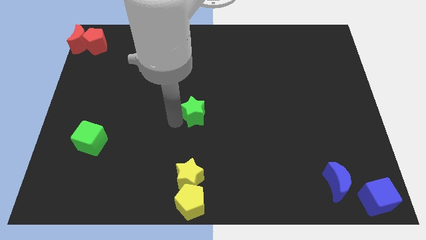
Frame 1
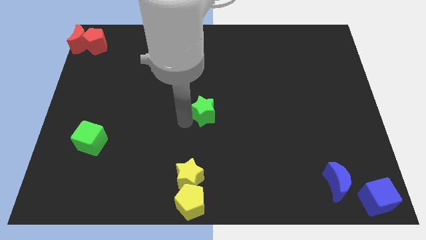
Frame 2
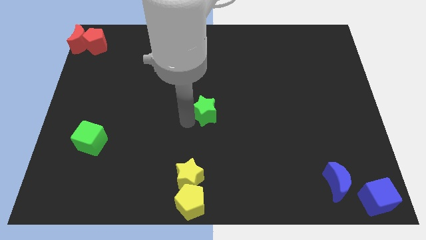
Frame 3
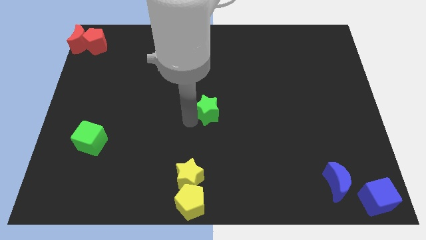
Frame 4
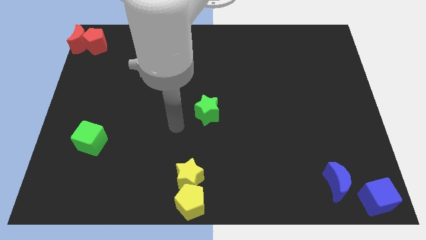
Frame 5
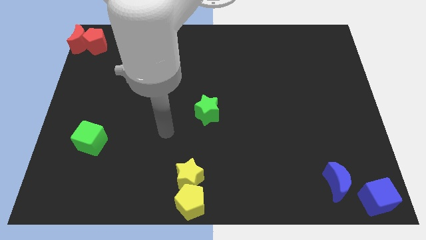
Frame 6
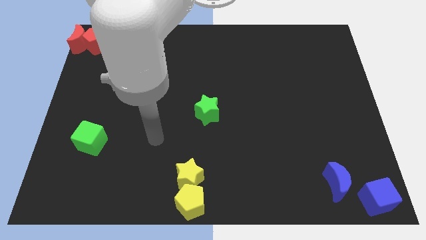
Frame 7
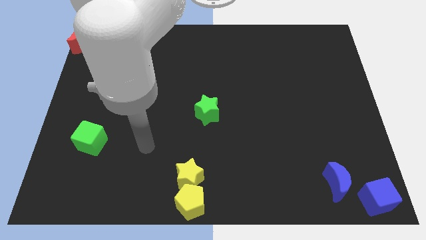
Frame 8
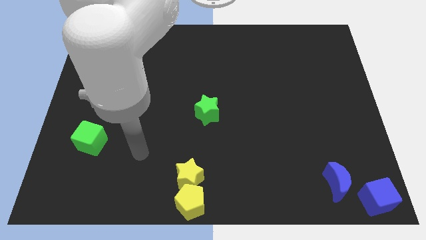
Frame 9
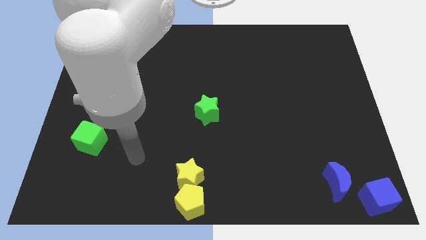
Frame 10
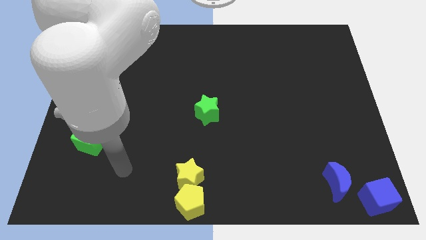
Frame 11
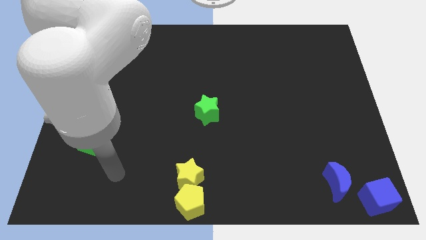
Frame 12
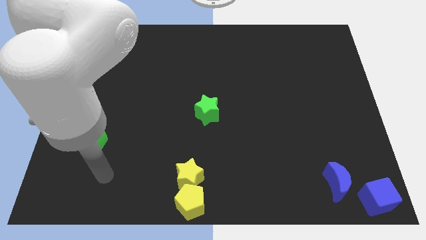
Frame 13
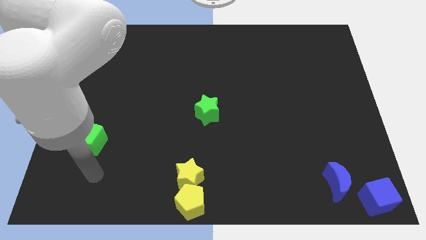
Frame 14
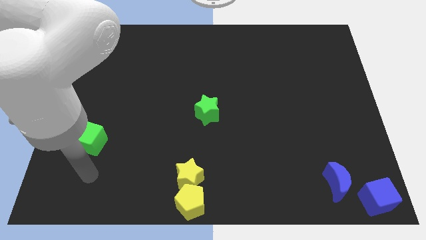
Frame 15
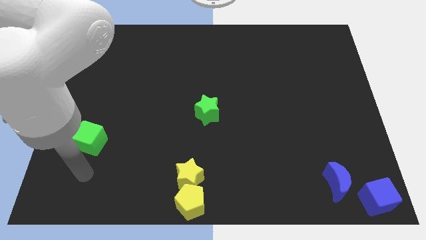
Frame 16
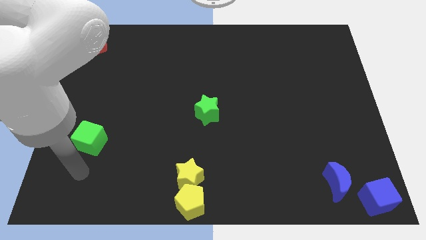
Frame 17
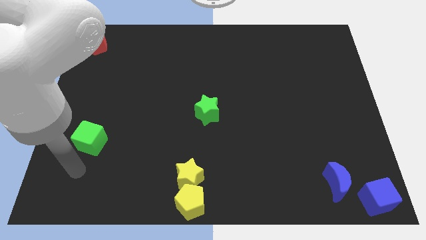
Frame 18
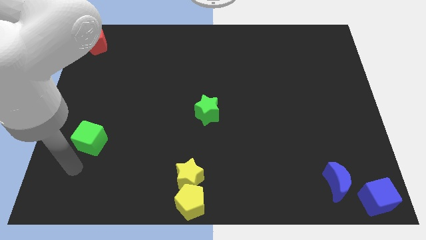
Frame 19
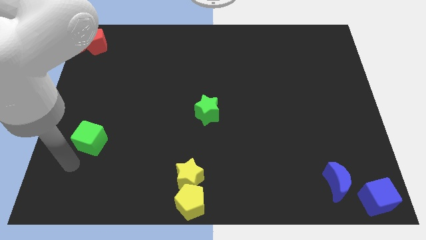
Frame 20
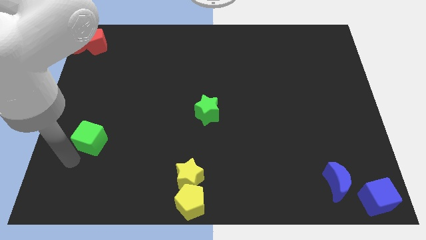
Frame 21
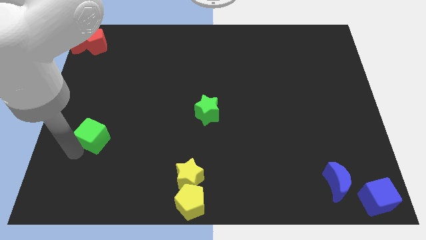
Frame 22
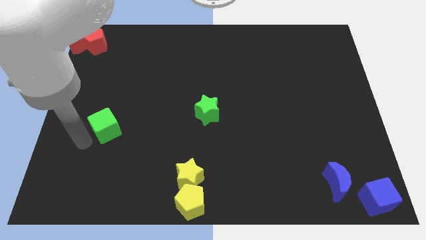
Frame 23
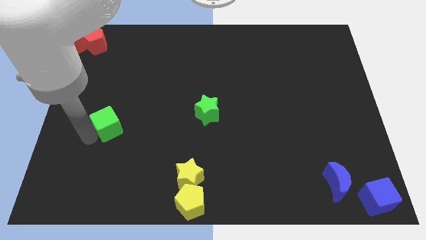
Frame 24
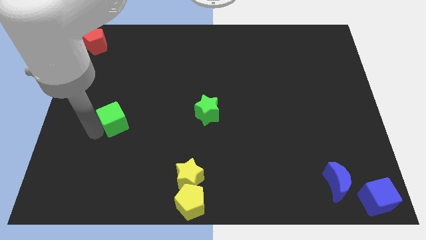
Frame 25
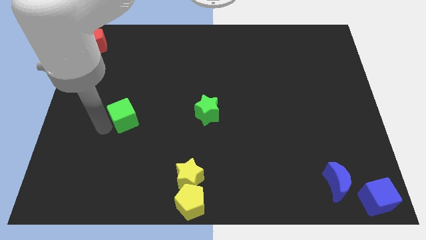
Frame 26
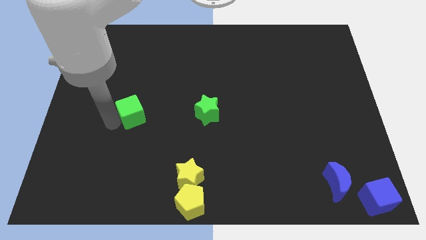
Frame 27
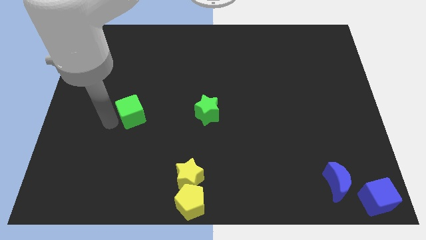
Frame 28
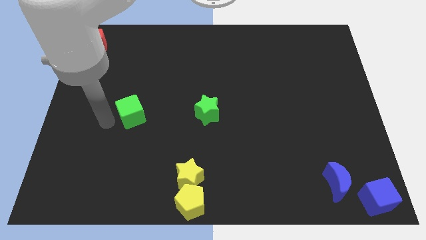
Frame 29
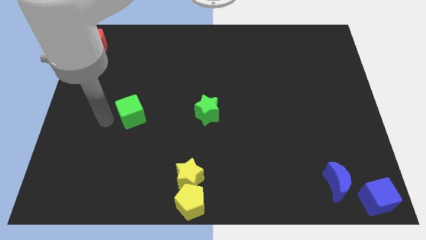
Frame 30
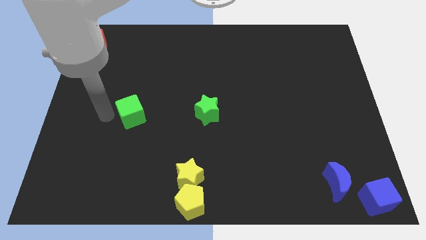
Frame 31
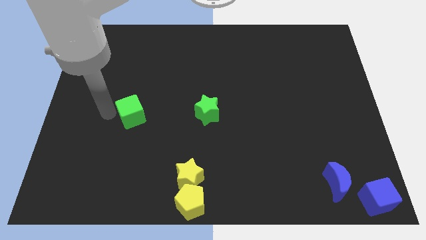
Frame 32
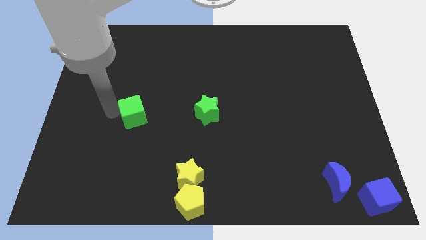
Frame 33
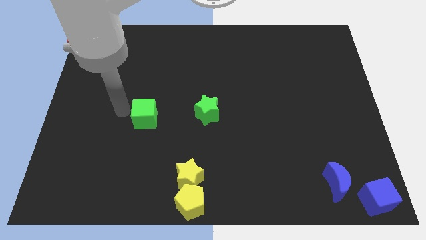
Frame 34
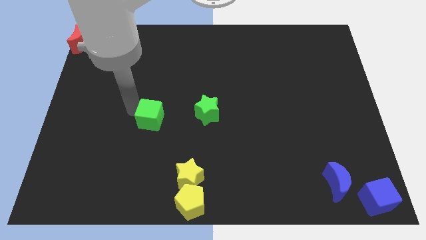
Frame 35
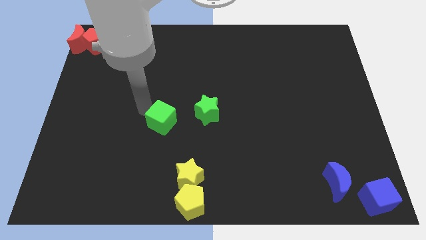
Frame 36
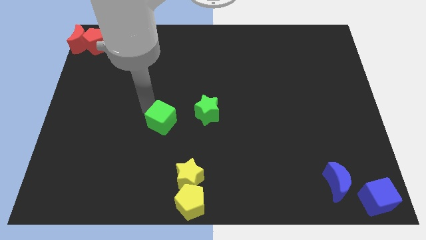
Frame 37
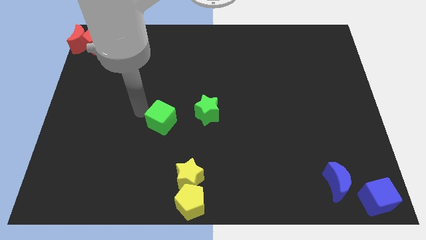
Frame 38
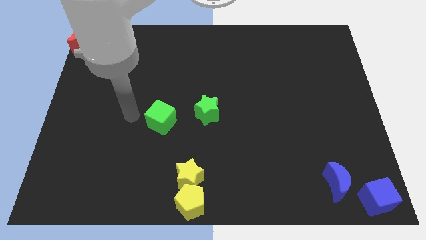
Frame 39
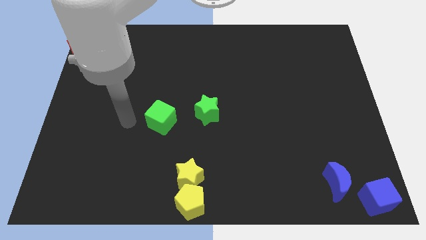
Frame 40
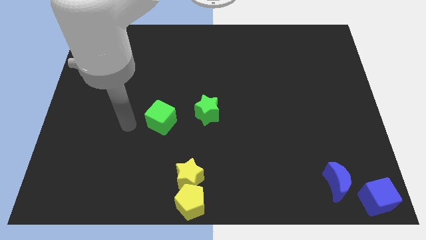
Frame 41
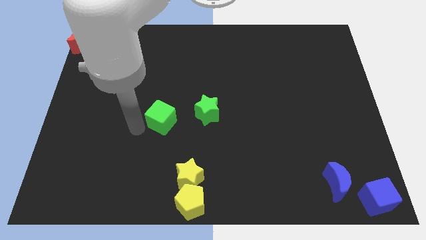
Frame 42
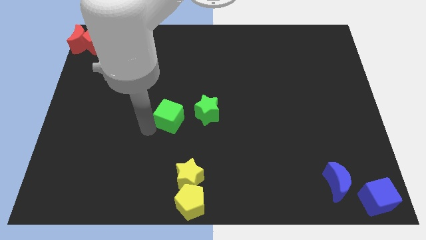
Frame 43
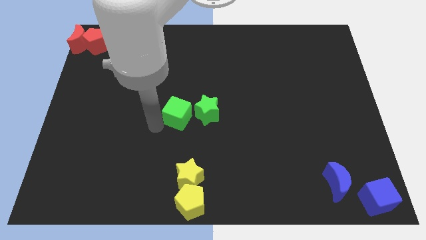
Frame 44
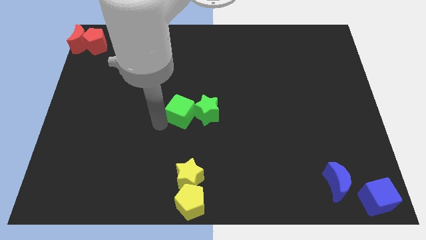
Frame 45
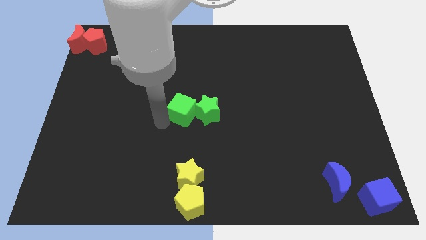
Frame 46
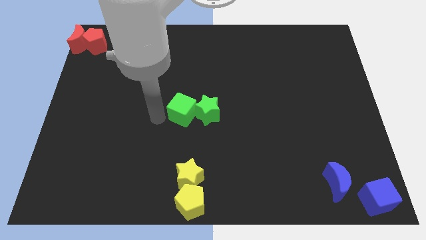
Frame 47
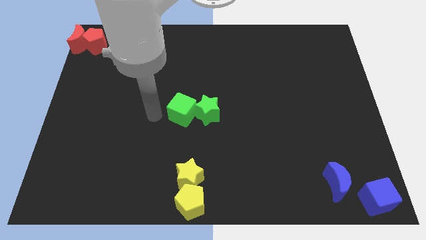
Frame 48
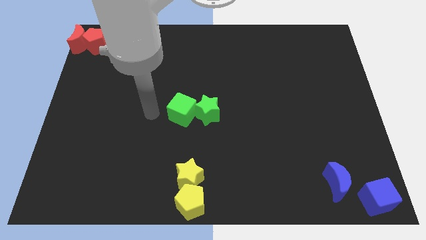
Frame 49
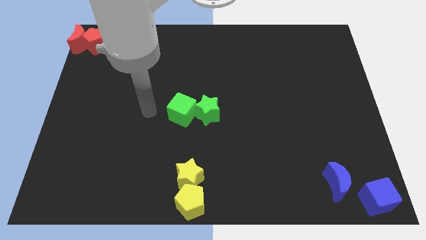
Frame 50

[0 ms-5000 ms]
push the green cube into the green star

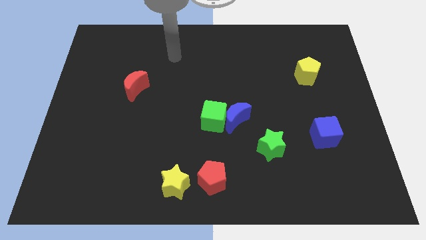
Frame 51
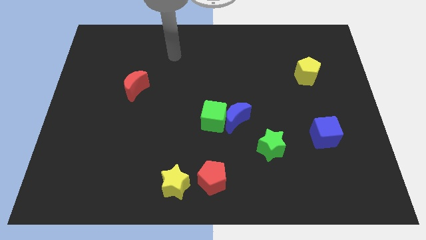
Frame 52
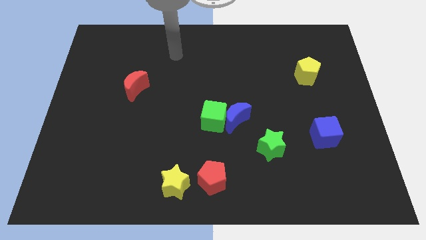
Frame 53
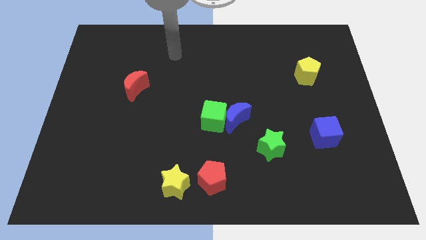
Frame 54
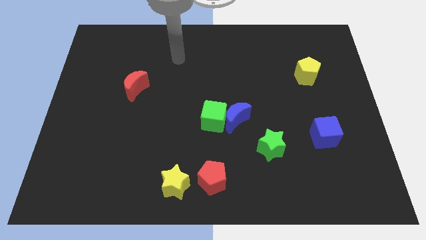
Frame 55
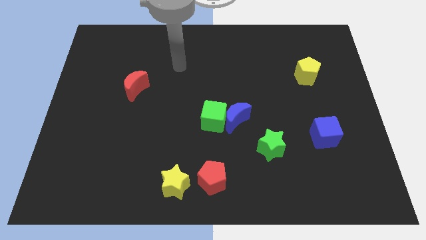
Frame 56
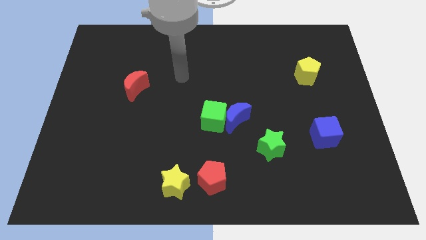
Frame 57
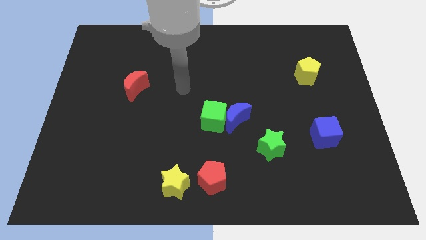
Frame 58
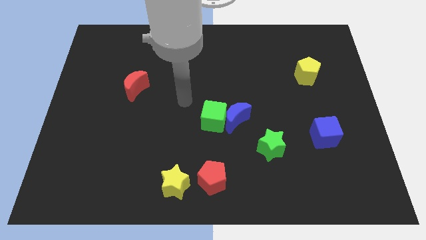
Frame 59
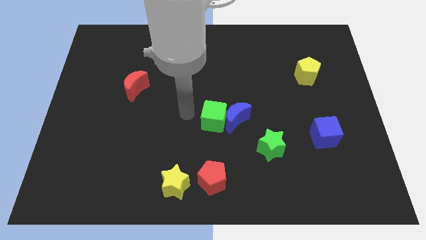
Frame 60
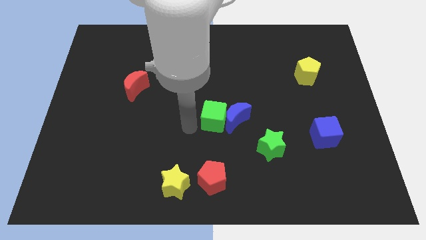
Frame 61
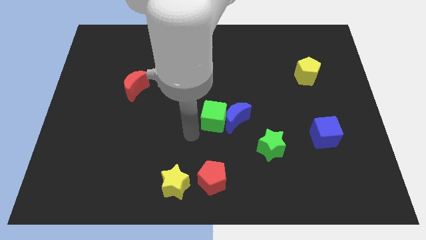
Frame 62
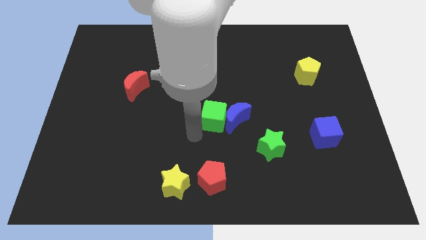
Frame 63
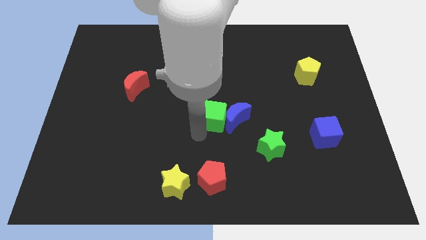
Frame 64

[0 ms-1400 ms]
point the arm at the bottom of the green cube

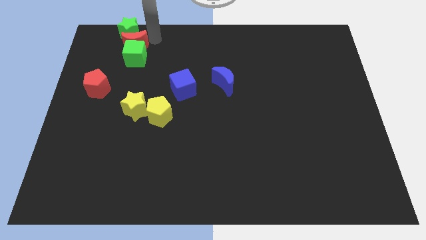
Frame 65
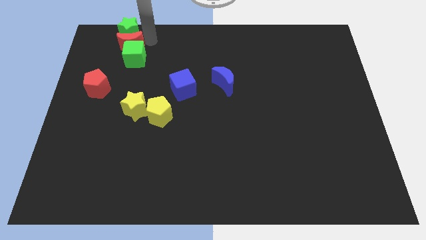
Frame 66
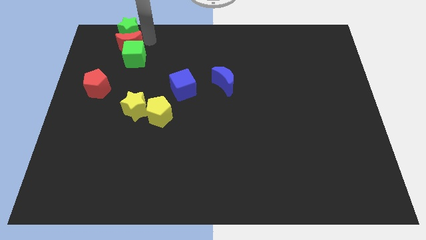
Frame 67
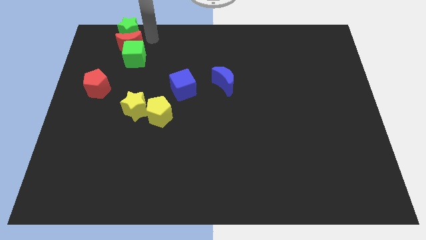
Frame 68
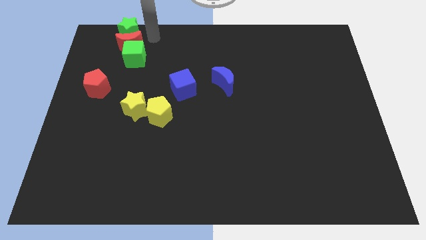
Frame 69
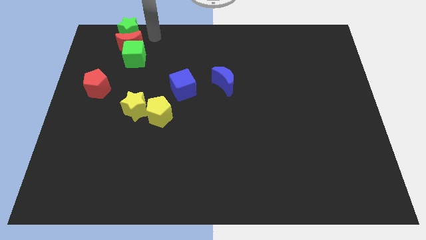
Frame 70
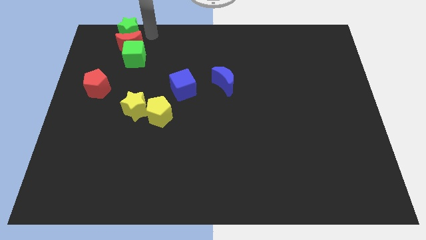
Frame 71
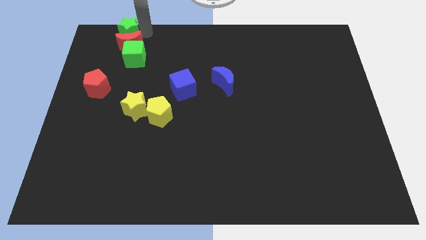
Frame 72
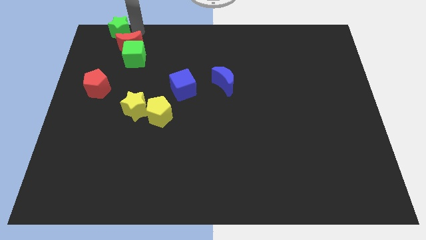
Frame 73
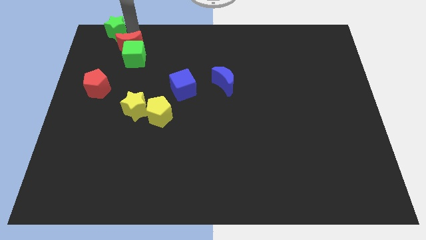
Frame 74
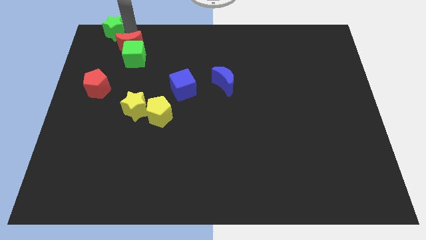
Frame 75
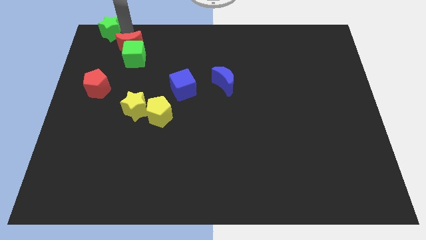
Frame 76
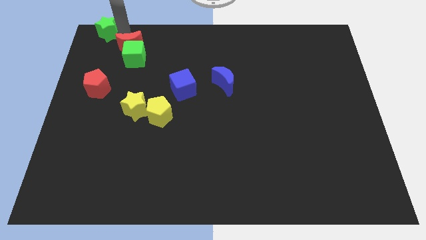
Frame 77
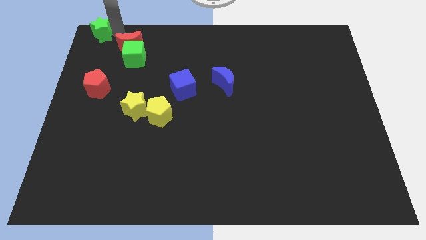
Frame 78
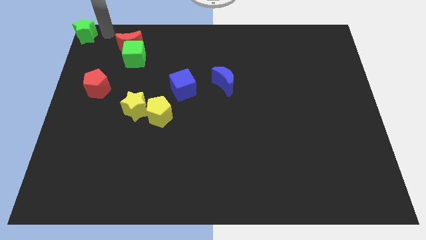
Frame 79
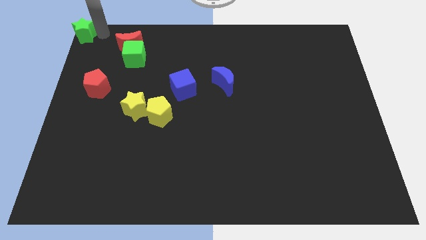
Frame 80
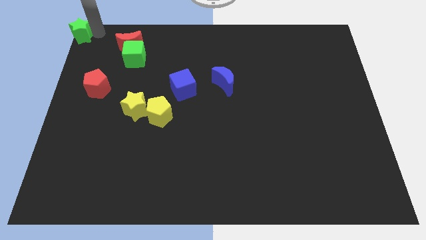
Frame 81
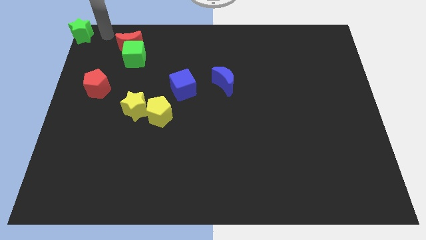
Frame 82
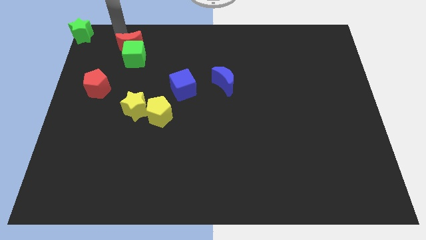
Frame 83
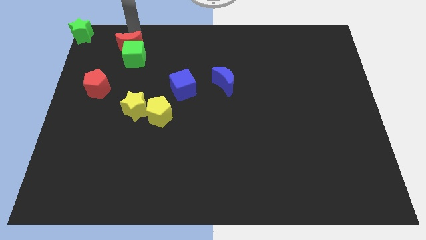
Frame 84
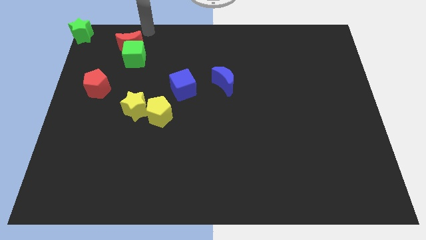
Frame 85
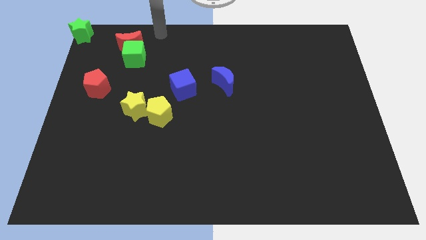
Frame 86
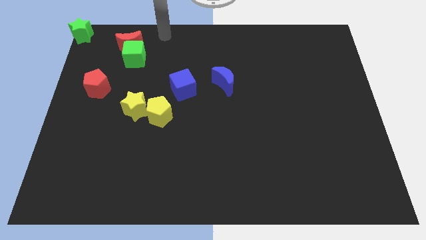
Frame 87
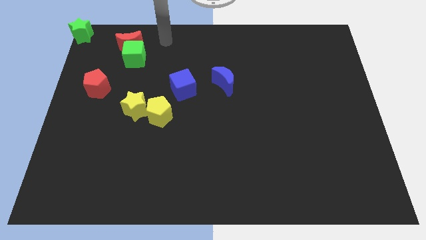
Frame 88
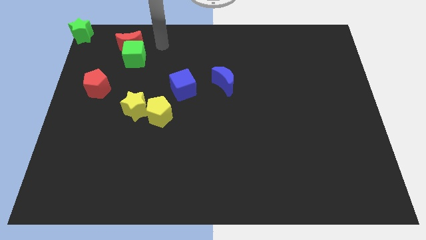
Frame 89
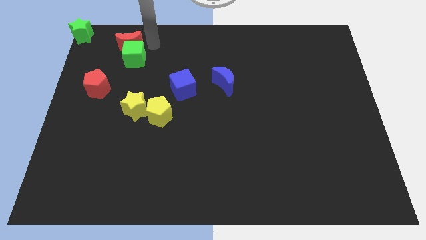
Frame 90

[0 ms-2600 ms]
move the green star to the top left corner of the board
